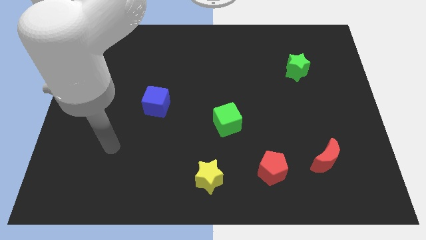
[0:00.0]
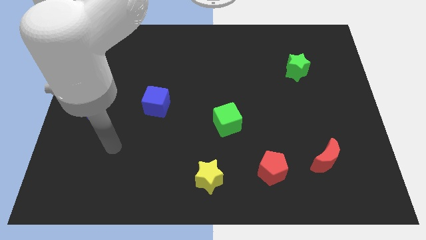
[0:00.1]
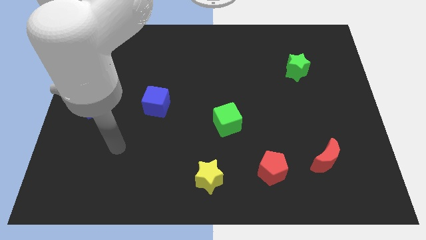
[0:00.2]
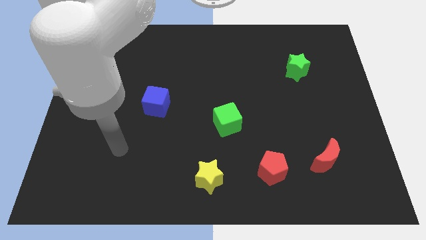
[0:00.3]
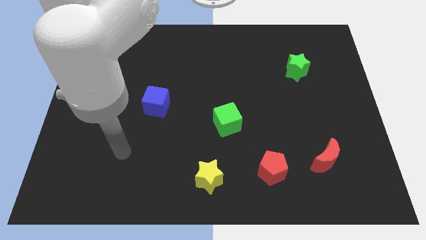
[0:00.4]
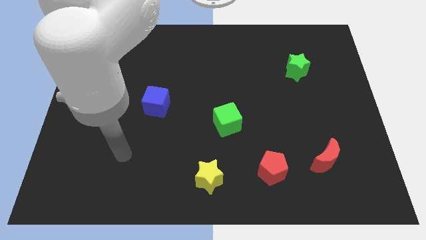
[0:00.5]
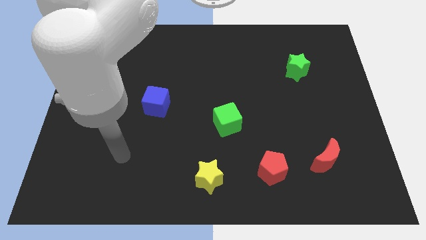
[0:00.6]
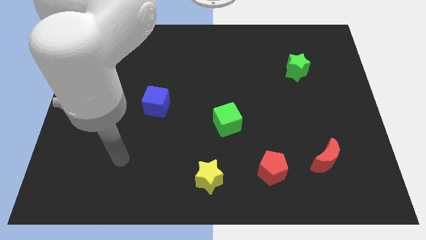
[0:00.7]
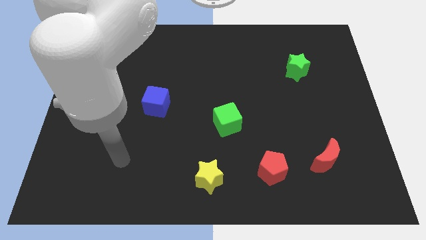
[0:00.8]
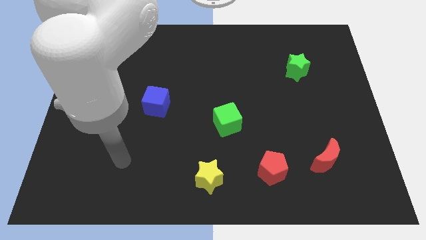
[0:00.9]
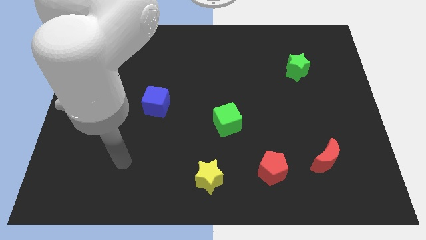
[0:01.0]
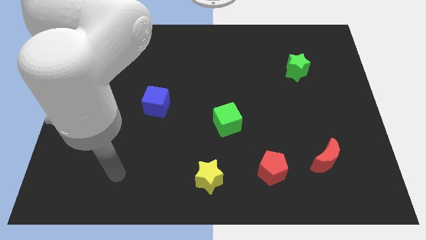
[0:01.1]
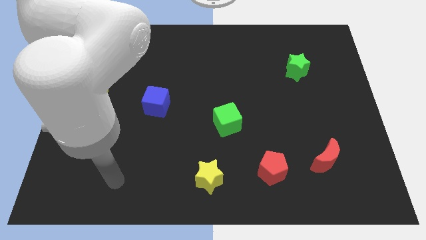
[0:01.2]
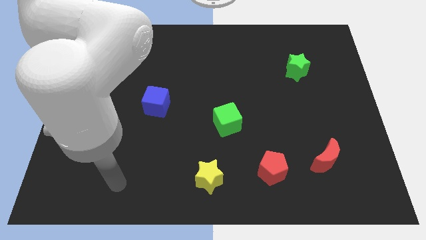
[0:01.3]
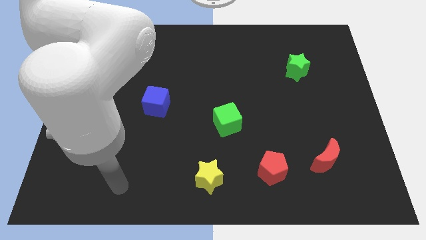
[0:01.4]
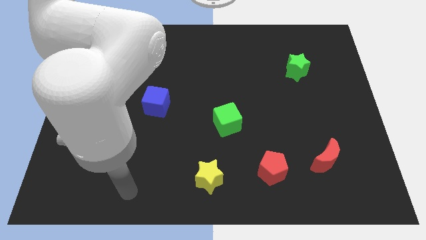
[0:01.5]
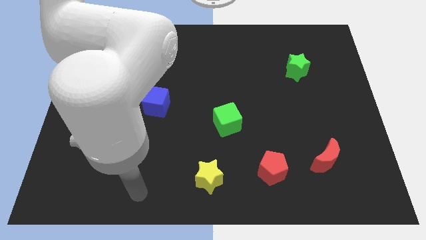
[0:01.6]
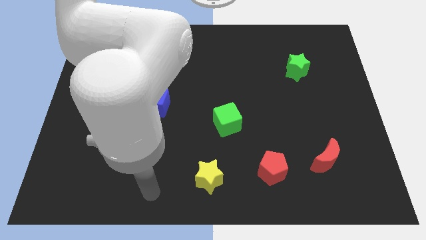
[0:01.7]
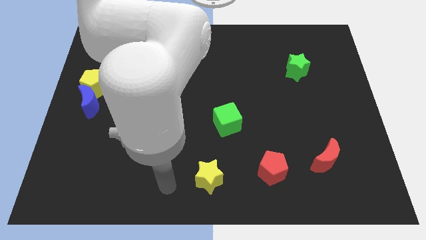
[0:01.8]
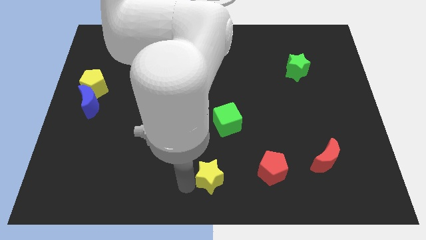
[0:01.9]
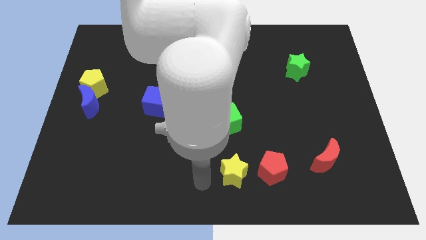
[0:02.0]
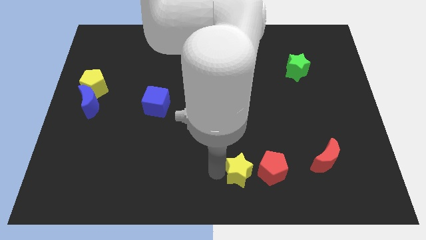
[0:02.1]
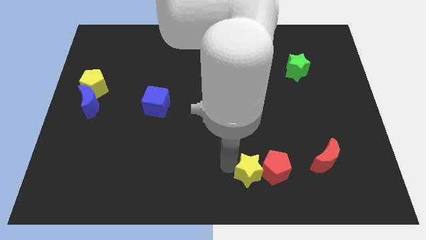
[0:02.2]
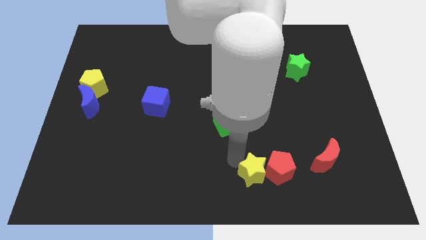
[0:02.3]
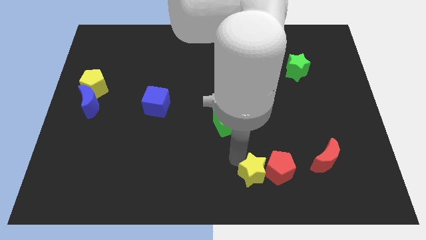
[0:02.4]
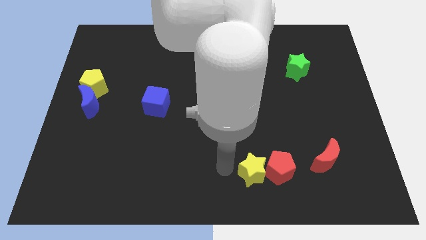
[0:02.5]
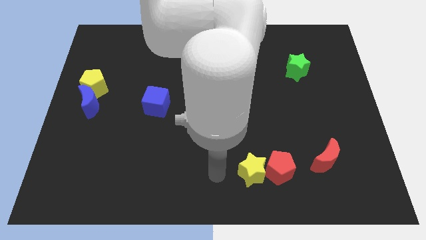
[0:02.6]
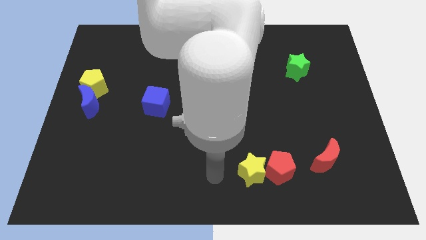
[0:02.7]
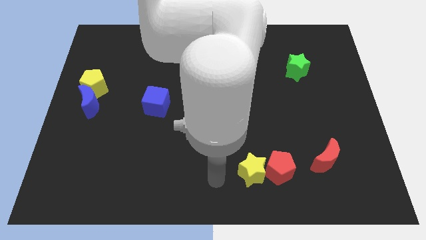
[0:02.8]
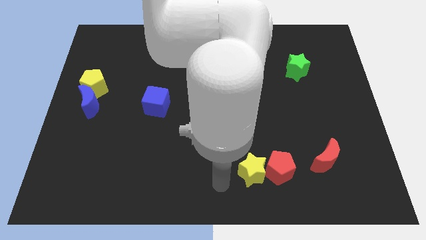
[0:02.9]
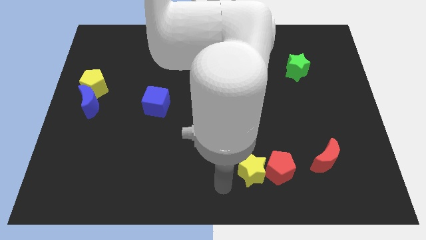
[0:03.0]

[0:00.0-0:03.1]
push the yellow star close to the red pentagon

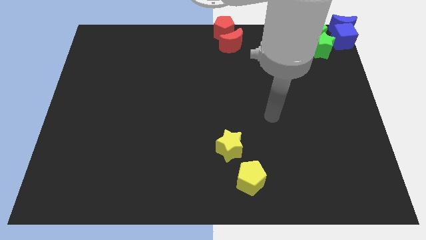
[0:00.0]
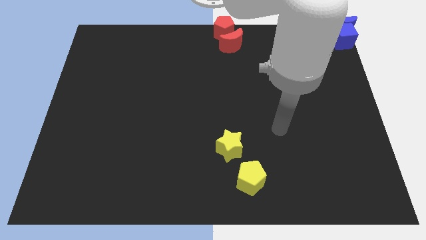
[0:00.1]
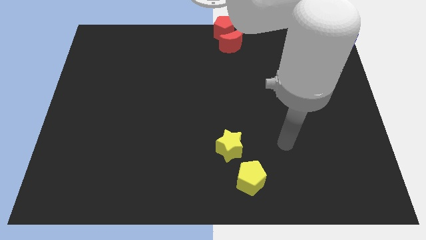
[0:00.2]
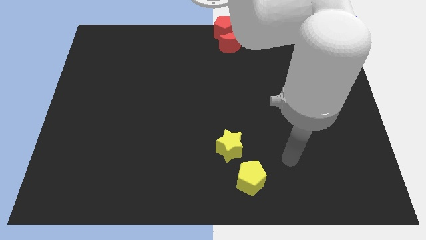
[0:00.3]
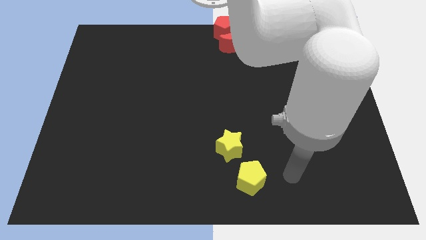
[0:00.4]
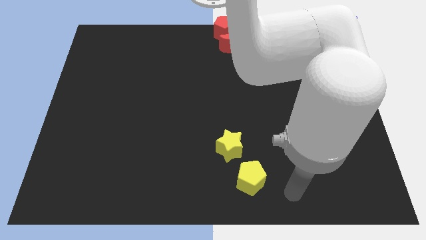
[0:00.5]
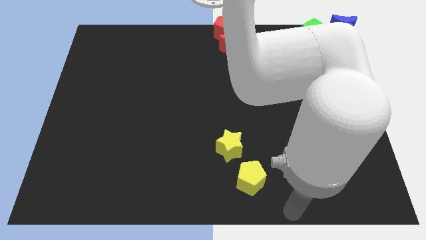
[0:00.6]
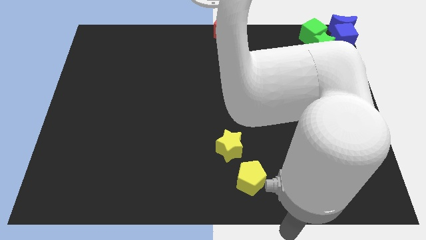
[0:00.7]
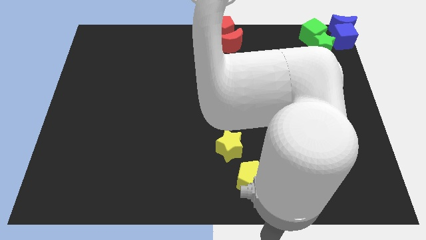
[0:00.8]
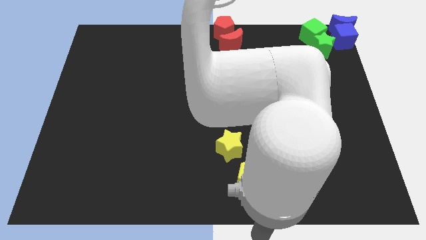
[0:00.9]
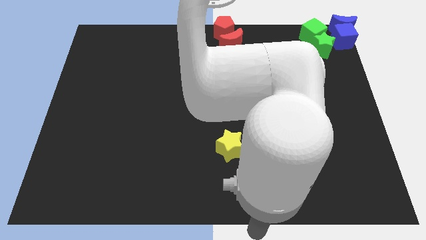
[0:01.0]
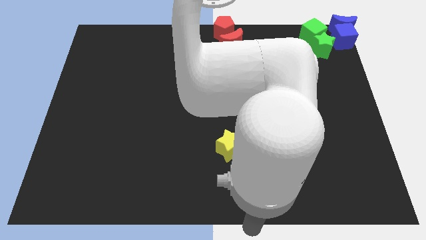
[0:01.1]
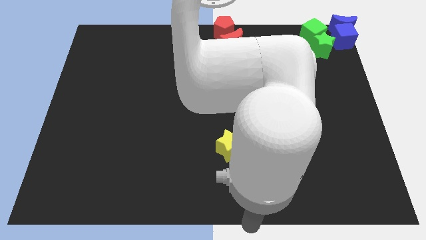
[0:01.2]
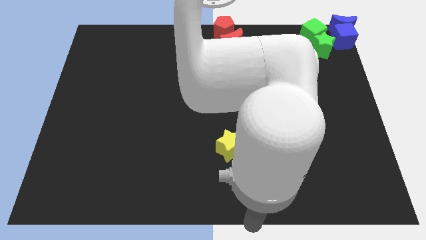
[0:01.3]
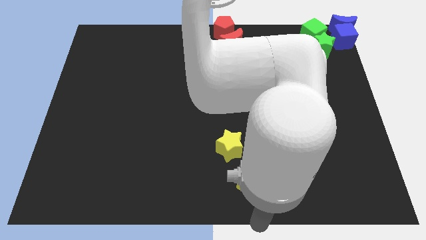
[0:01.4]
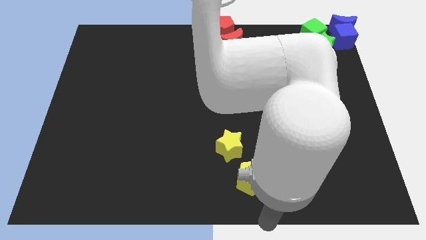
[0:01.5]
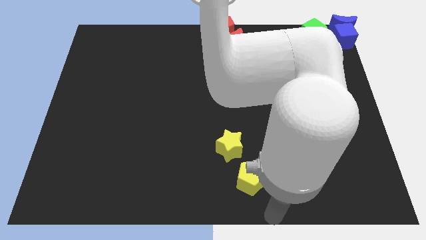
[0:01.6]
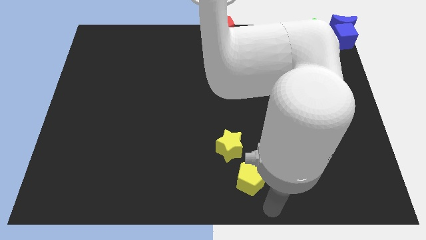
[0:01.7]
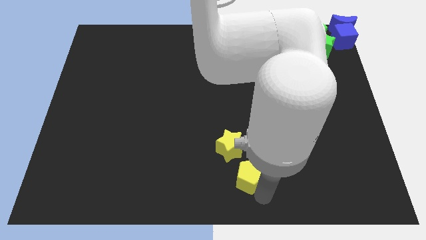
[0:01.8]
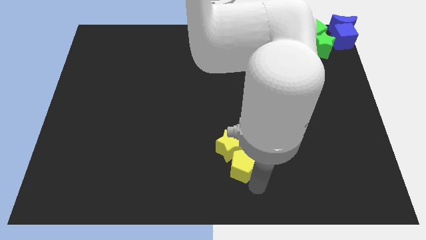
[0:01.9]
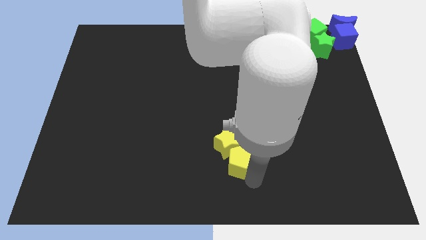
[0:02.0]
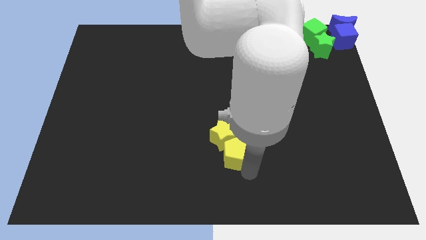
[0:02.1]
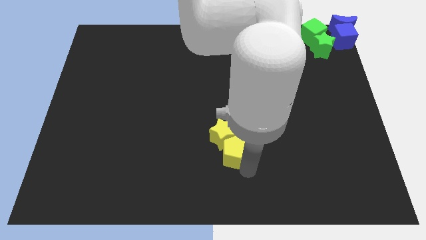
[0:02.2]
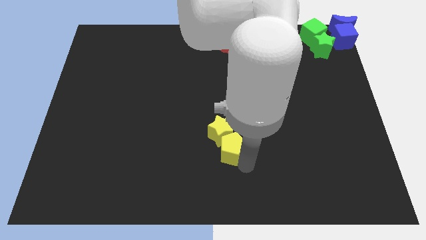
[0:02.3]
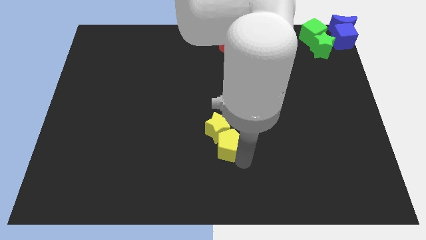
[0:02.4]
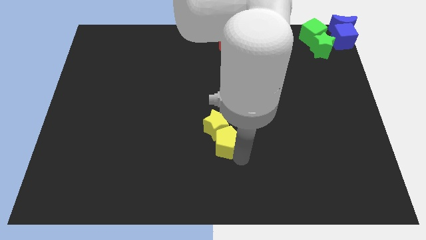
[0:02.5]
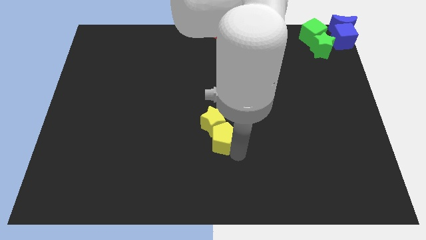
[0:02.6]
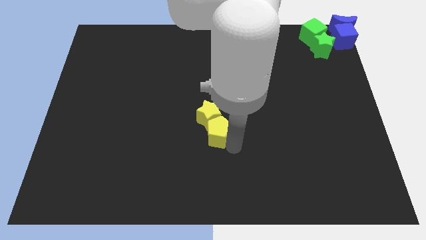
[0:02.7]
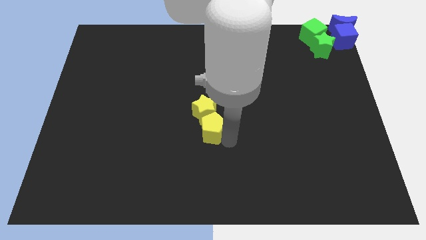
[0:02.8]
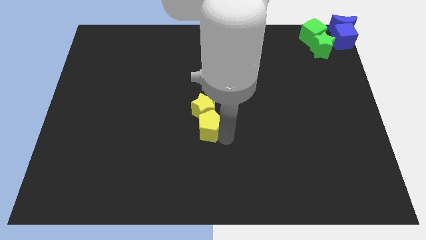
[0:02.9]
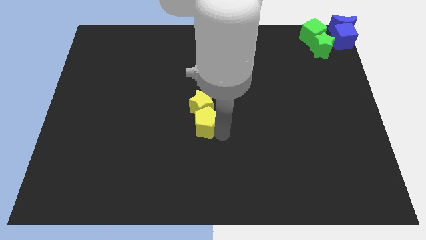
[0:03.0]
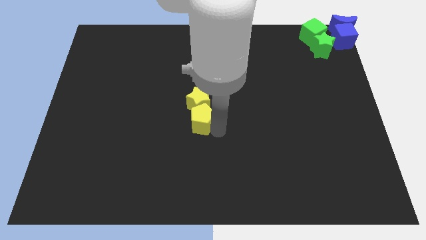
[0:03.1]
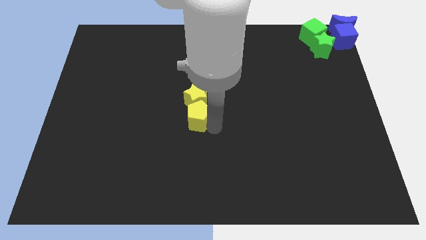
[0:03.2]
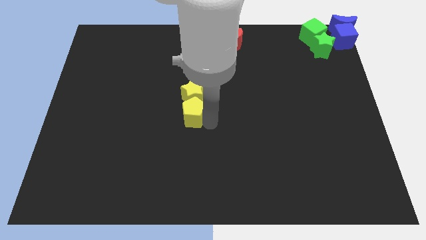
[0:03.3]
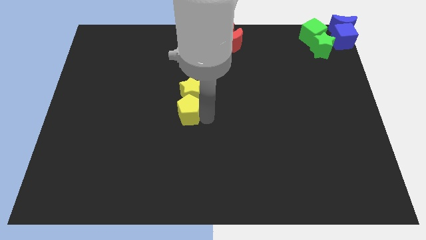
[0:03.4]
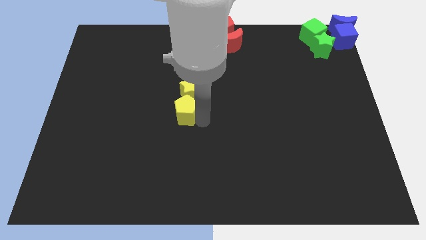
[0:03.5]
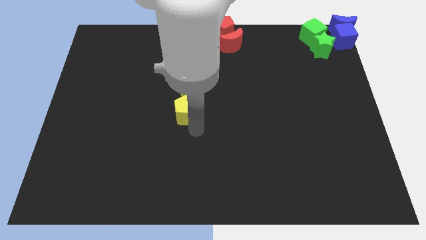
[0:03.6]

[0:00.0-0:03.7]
push the yellow blocks to the top

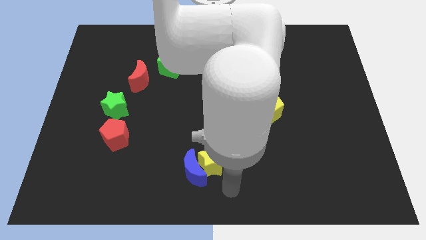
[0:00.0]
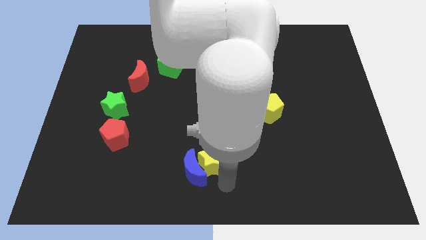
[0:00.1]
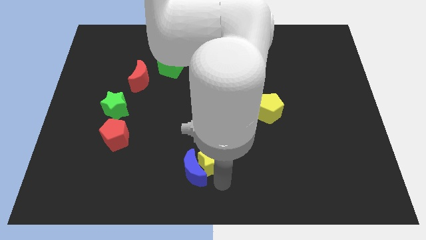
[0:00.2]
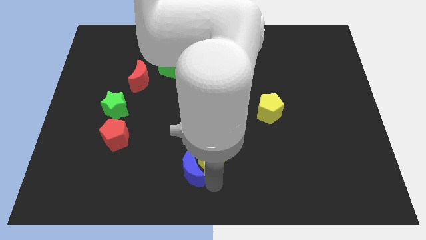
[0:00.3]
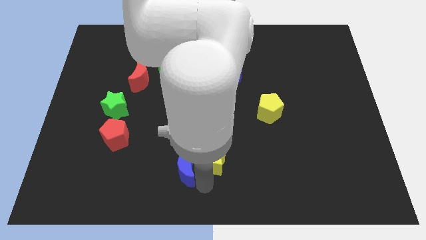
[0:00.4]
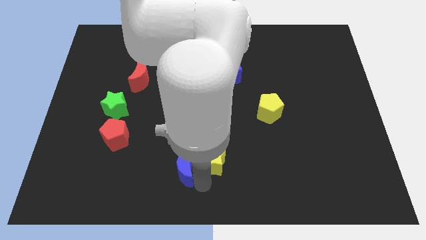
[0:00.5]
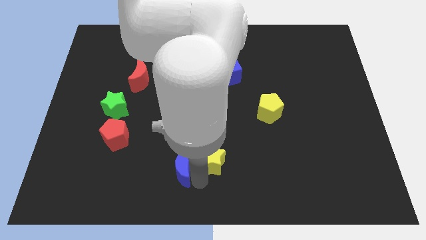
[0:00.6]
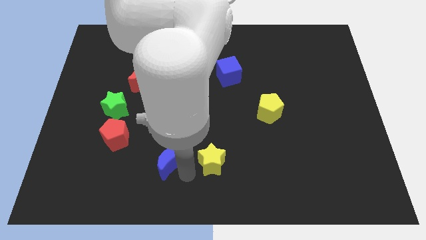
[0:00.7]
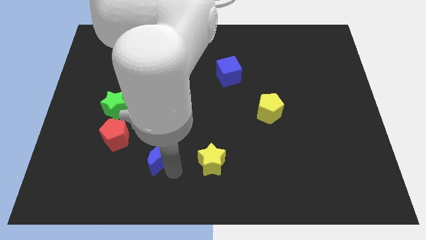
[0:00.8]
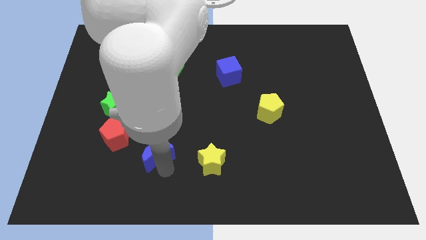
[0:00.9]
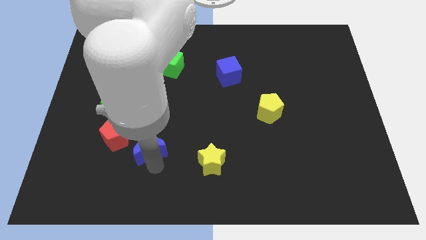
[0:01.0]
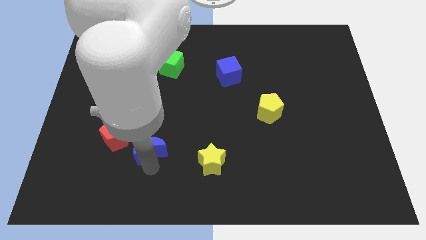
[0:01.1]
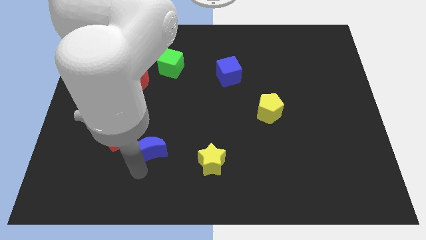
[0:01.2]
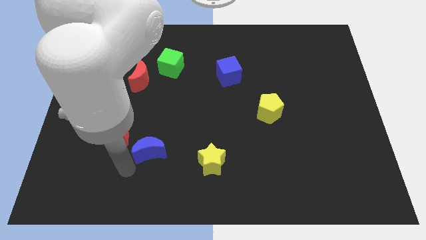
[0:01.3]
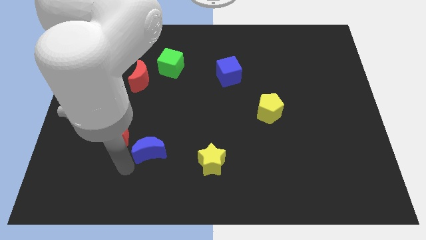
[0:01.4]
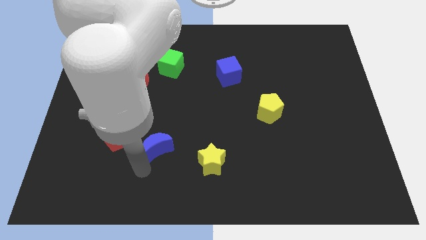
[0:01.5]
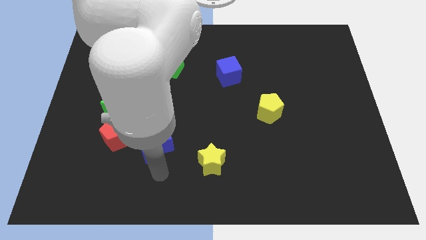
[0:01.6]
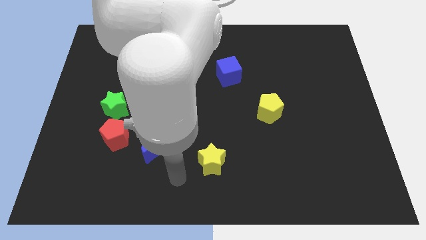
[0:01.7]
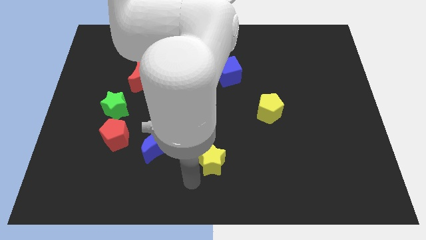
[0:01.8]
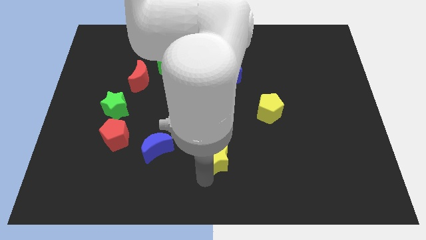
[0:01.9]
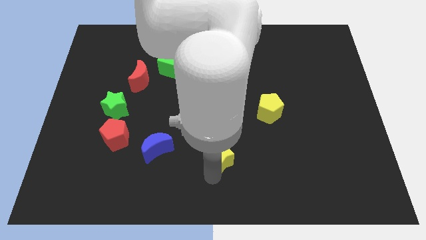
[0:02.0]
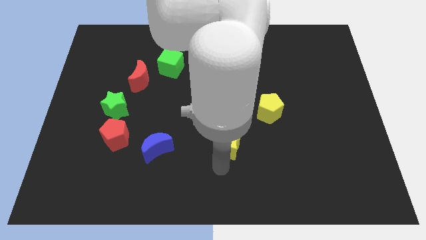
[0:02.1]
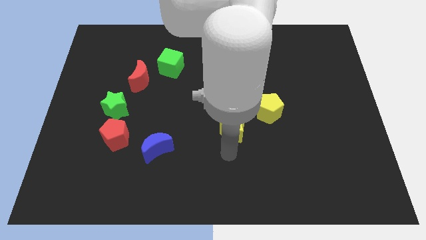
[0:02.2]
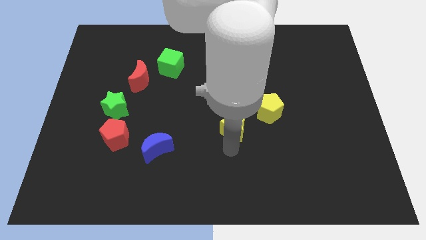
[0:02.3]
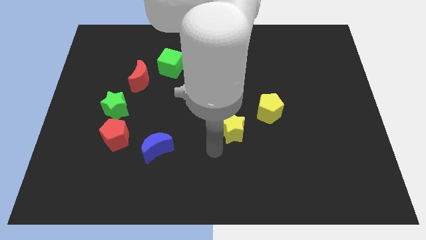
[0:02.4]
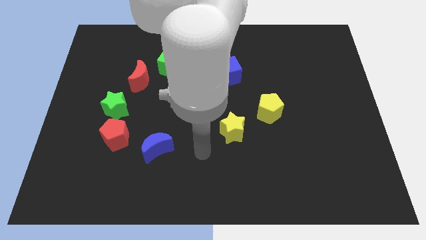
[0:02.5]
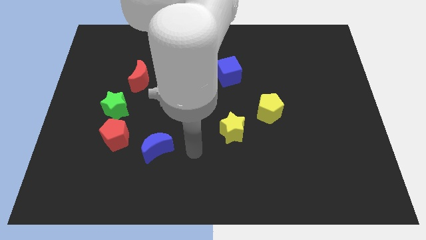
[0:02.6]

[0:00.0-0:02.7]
push yellow star towards yellow pentagon
